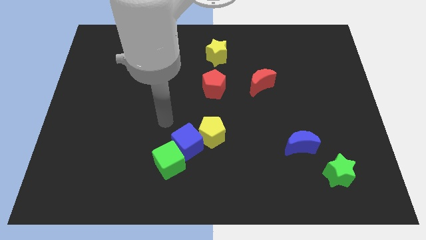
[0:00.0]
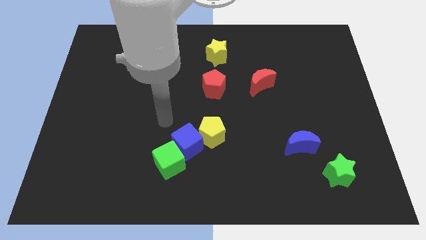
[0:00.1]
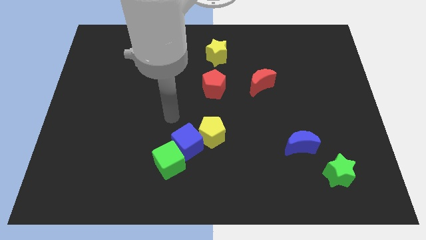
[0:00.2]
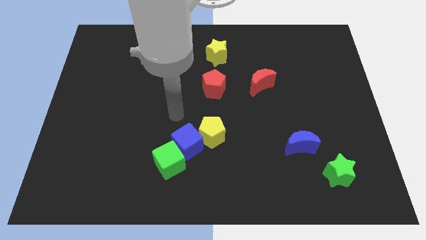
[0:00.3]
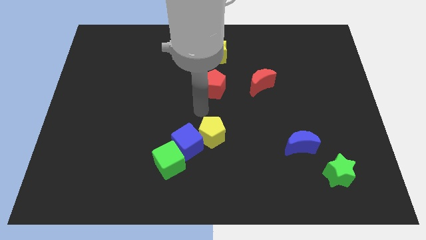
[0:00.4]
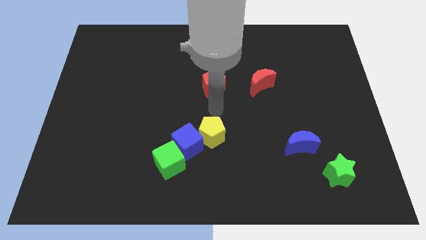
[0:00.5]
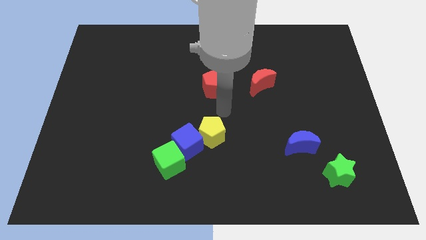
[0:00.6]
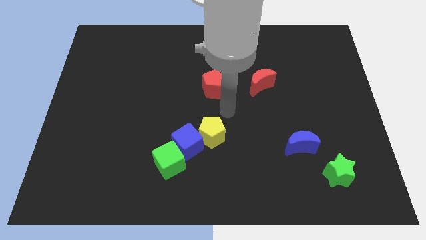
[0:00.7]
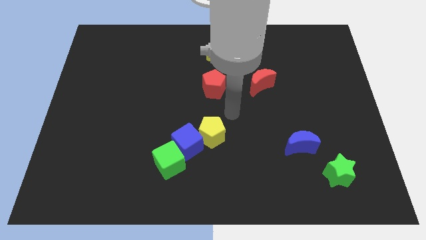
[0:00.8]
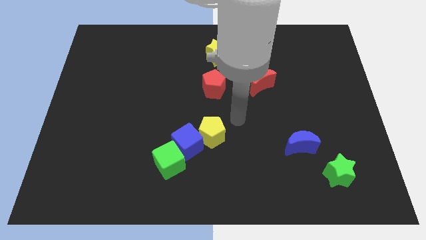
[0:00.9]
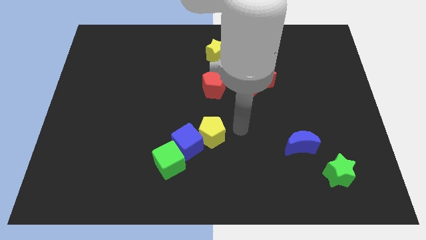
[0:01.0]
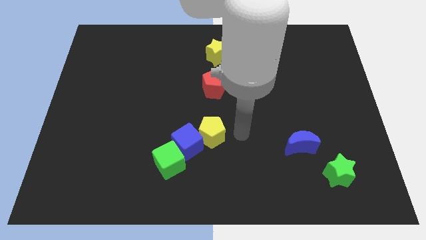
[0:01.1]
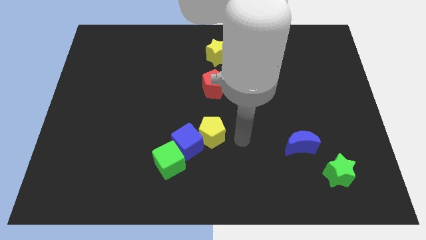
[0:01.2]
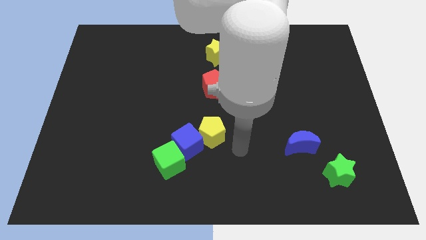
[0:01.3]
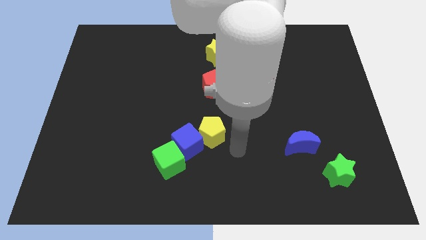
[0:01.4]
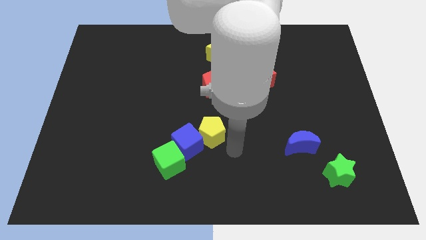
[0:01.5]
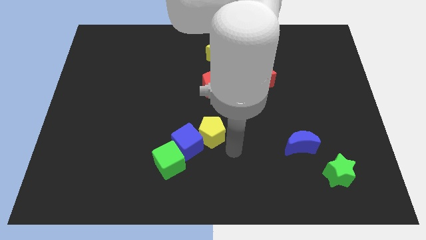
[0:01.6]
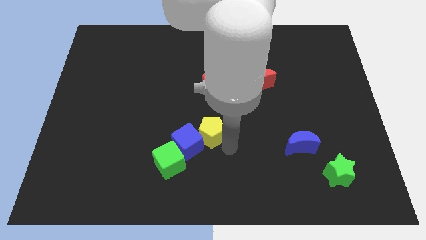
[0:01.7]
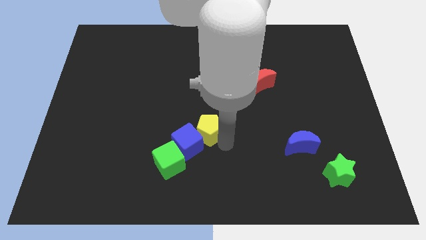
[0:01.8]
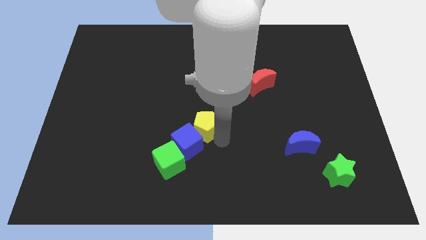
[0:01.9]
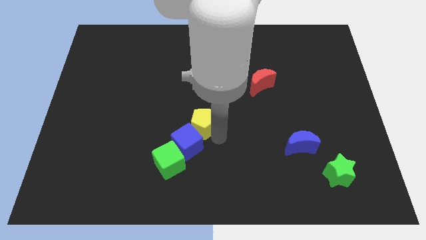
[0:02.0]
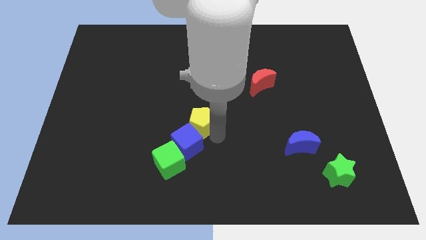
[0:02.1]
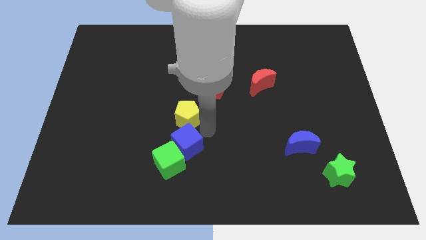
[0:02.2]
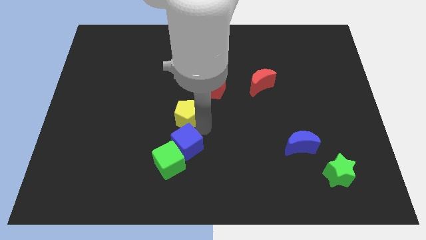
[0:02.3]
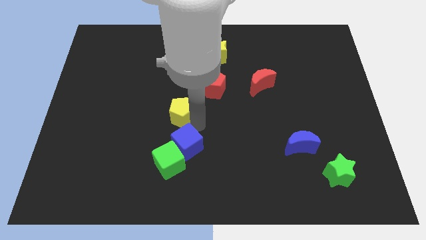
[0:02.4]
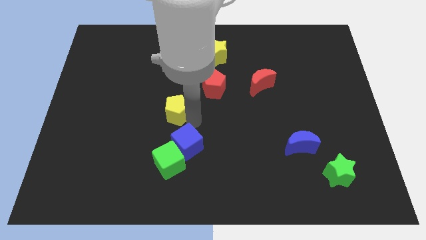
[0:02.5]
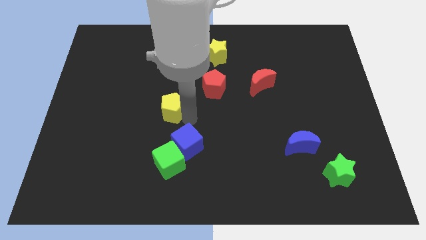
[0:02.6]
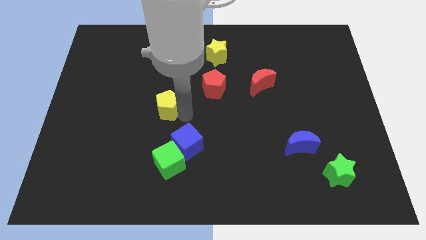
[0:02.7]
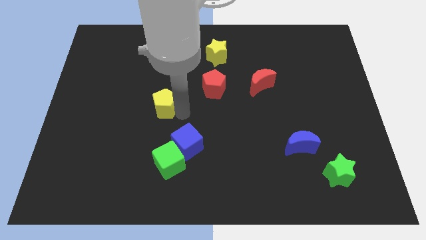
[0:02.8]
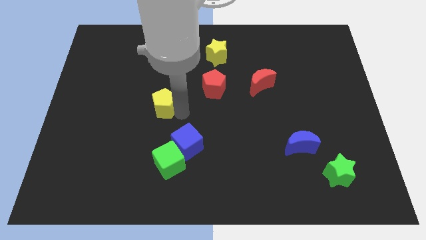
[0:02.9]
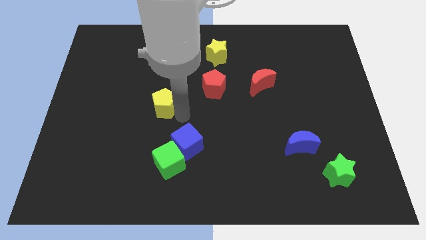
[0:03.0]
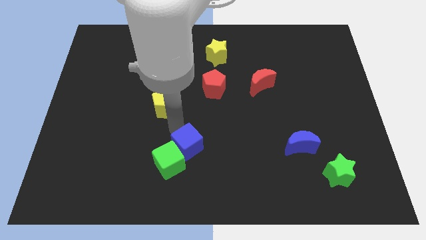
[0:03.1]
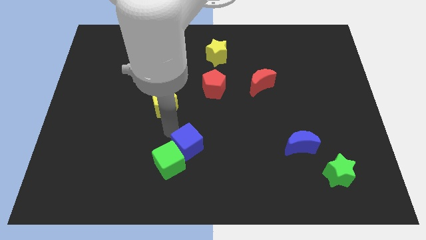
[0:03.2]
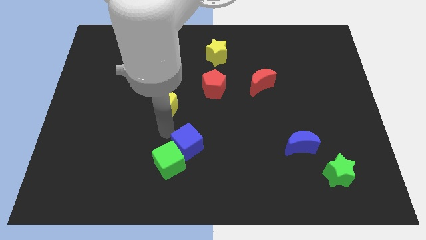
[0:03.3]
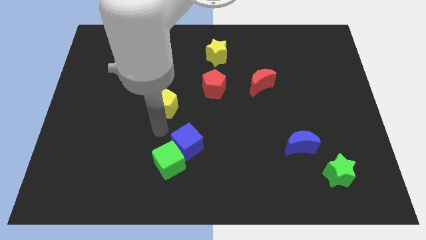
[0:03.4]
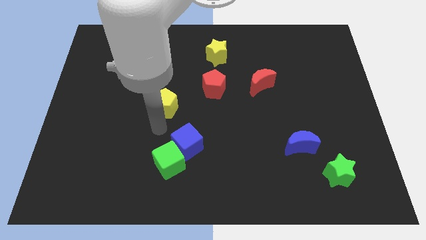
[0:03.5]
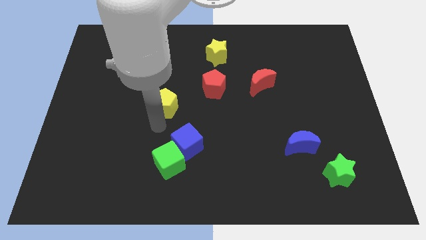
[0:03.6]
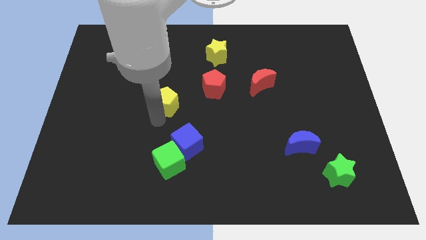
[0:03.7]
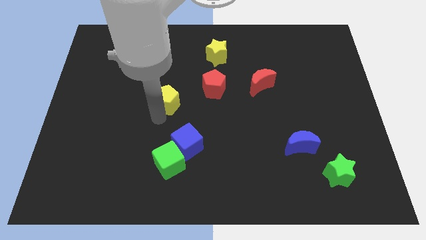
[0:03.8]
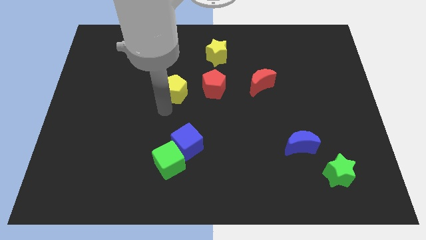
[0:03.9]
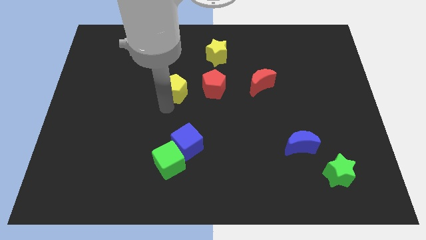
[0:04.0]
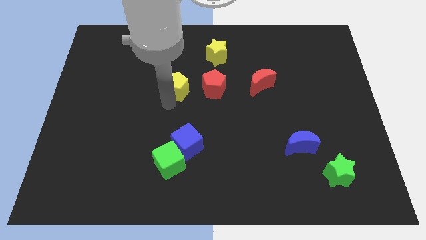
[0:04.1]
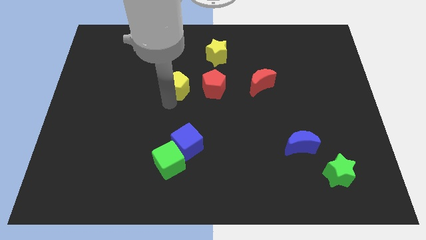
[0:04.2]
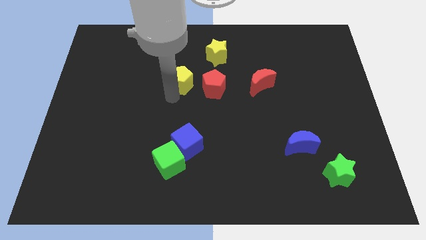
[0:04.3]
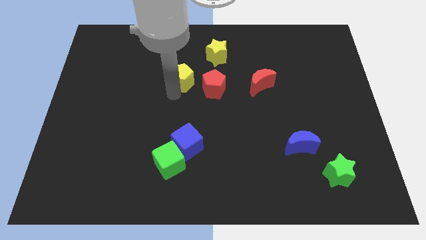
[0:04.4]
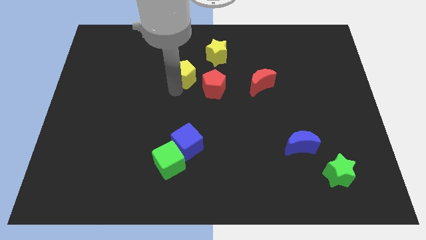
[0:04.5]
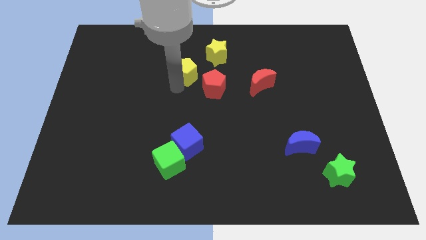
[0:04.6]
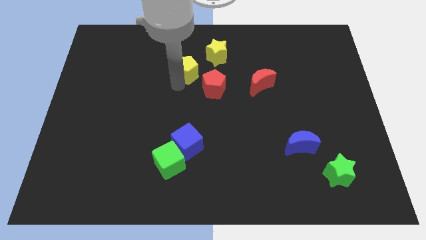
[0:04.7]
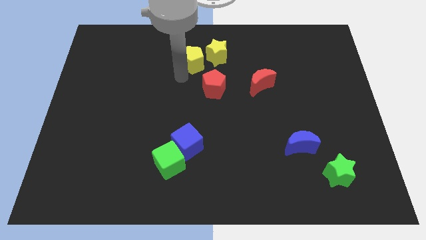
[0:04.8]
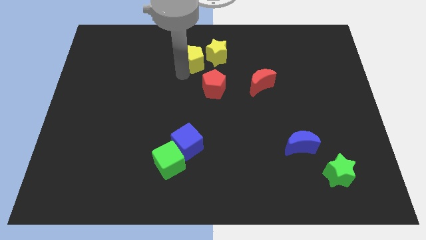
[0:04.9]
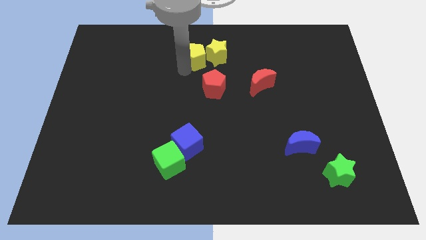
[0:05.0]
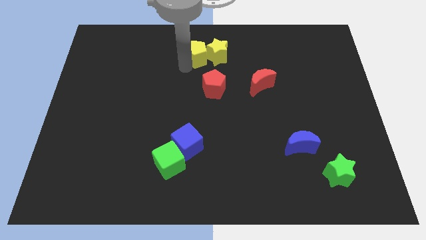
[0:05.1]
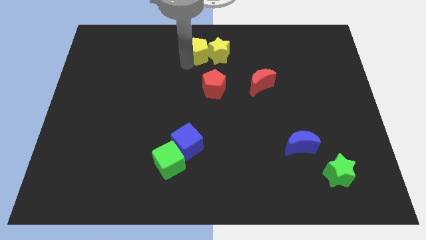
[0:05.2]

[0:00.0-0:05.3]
slide the yellow pentagon towards the yellow star

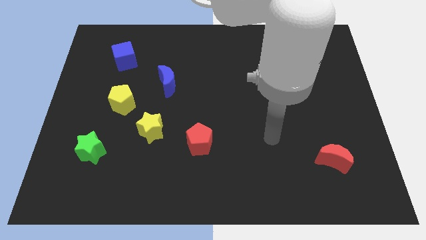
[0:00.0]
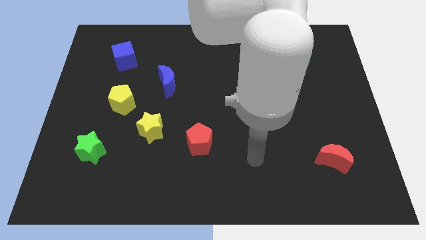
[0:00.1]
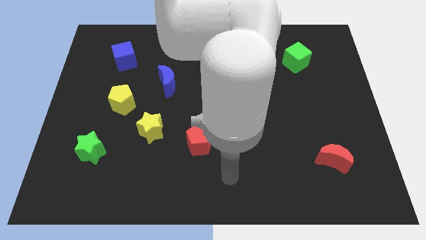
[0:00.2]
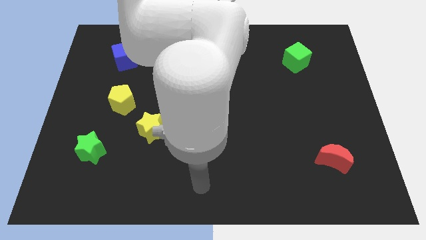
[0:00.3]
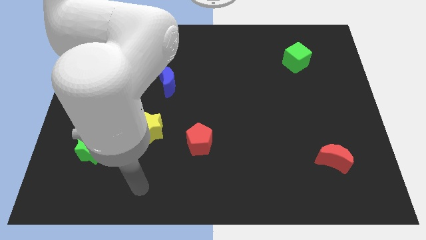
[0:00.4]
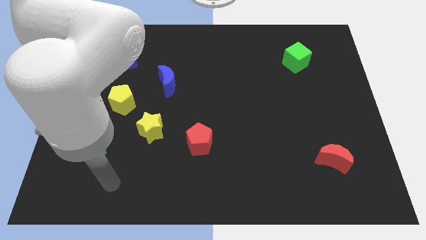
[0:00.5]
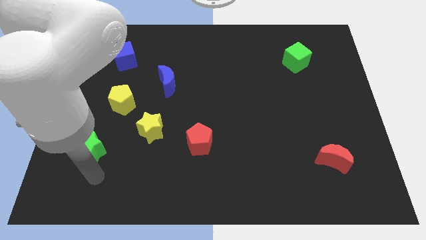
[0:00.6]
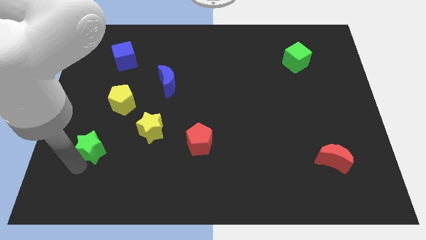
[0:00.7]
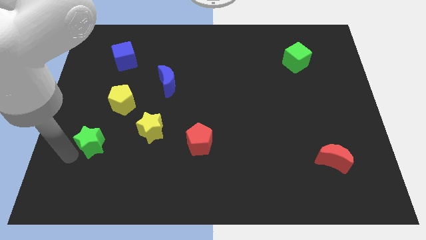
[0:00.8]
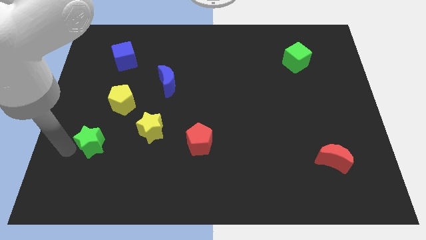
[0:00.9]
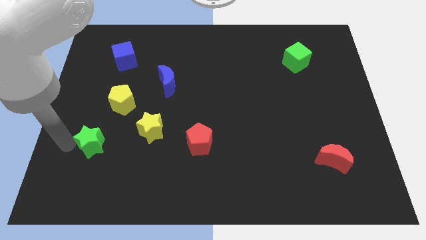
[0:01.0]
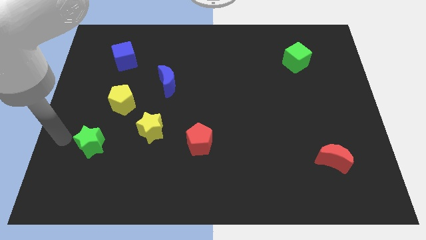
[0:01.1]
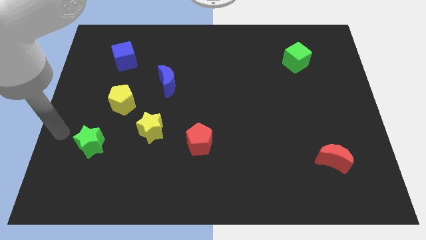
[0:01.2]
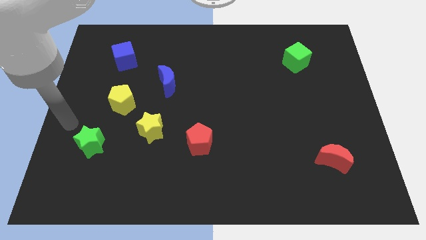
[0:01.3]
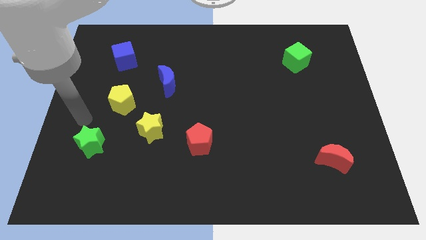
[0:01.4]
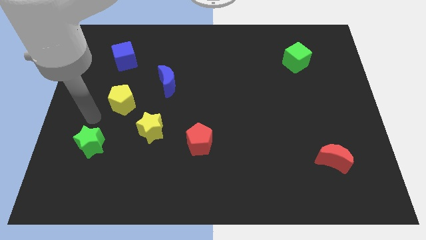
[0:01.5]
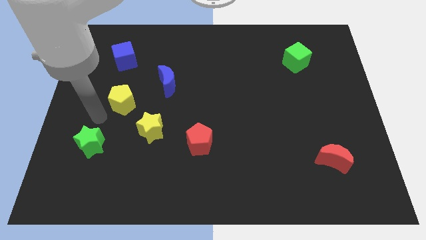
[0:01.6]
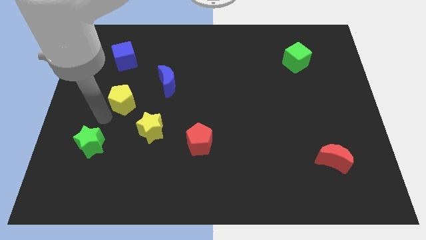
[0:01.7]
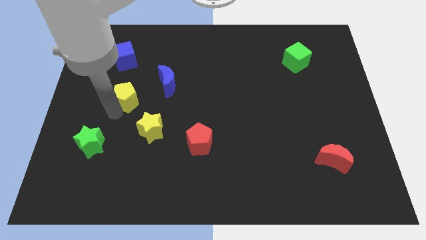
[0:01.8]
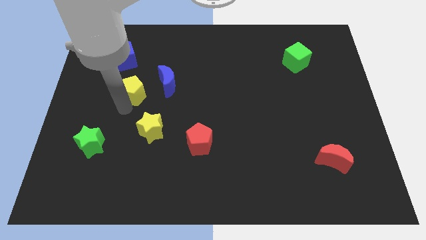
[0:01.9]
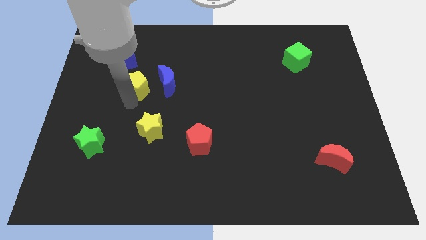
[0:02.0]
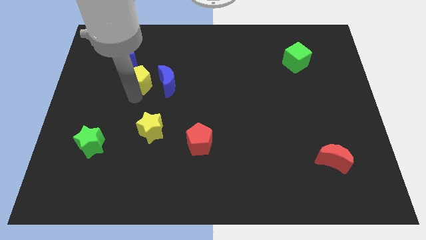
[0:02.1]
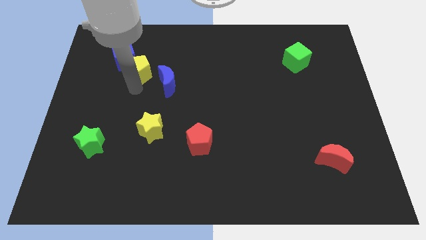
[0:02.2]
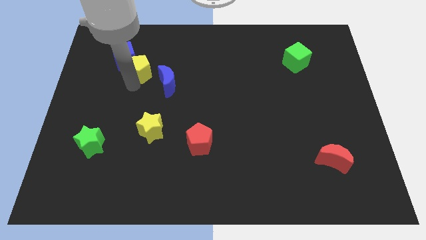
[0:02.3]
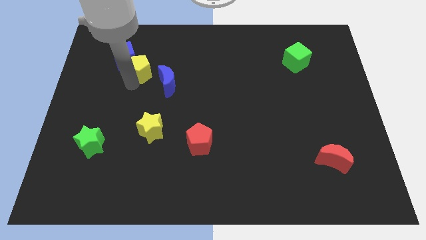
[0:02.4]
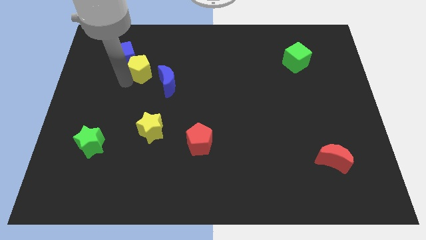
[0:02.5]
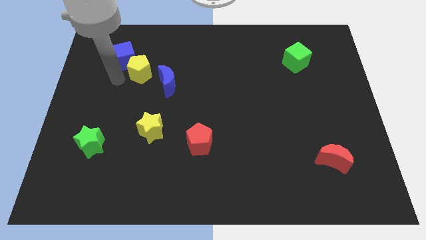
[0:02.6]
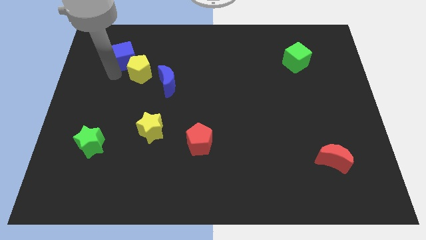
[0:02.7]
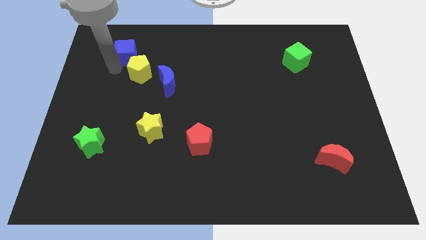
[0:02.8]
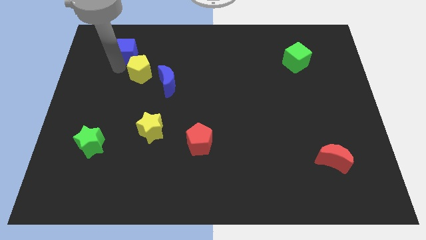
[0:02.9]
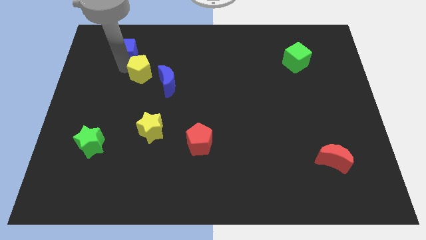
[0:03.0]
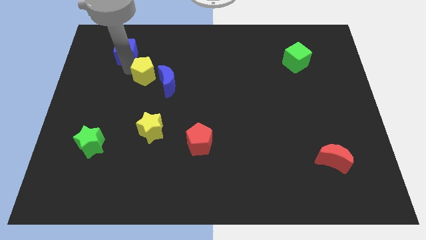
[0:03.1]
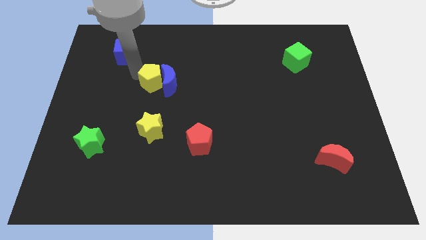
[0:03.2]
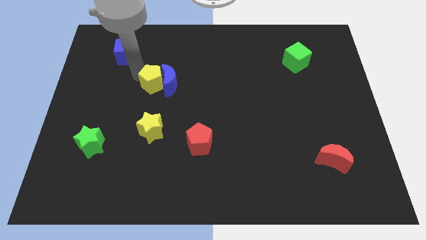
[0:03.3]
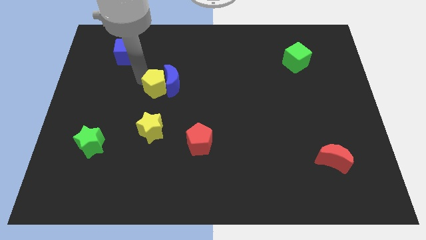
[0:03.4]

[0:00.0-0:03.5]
push the yellow pentagon close to the blue moon
